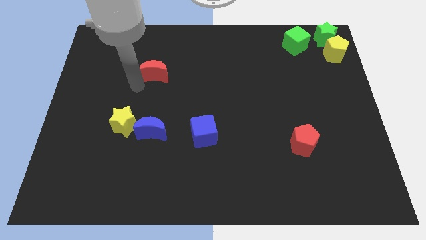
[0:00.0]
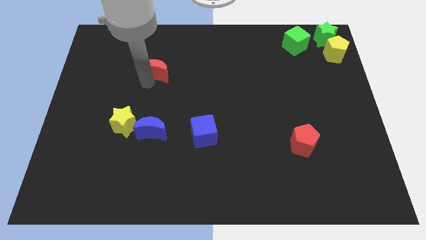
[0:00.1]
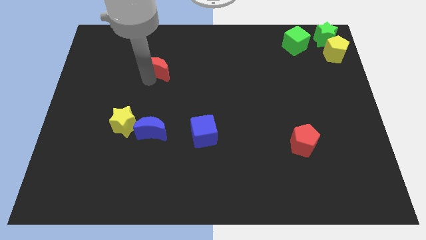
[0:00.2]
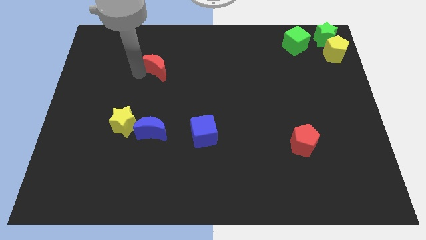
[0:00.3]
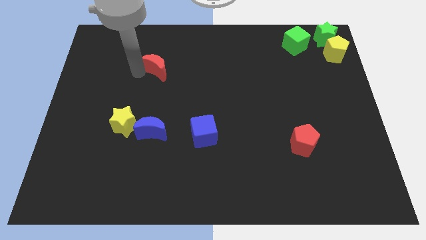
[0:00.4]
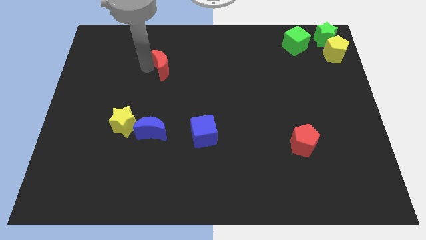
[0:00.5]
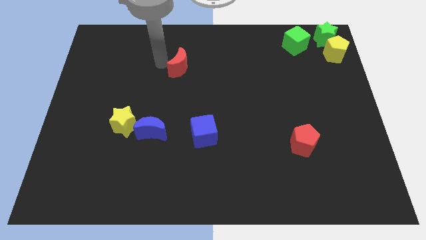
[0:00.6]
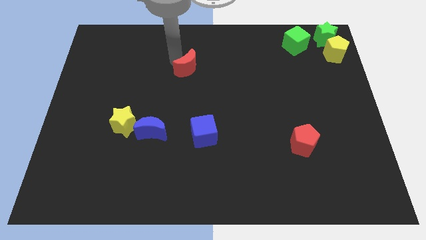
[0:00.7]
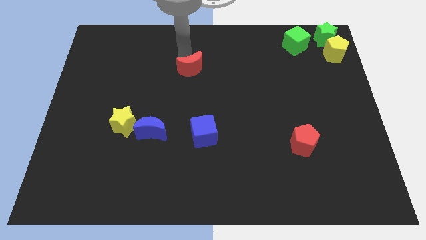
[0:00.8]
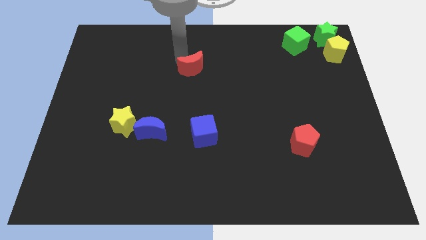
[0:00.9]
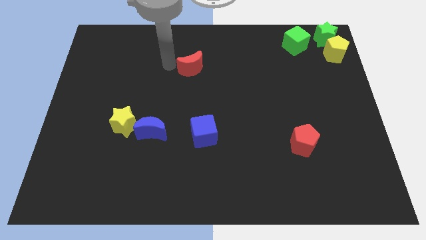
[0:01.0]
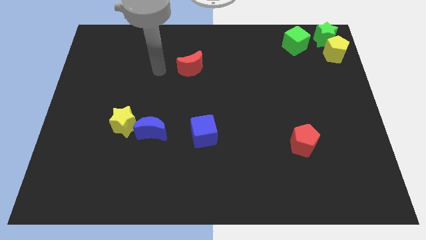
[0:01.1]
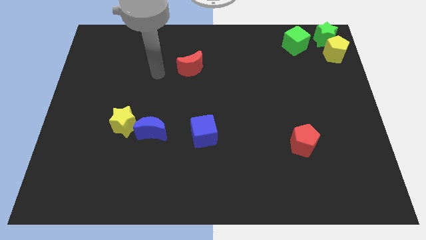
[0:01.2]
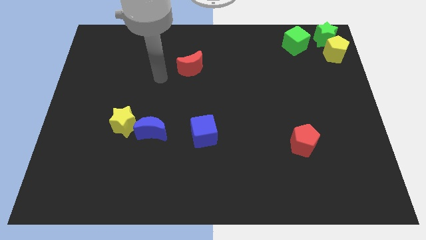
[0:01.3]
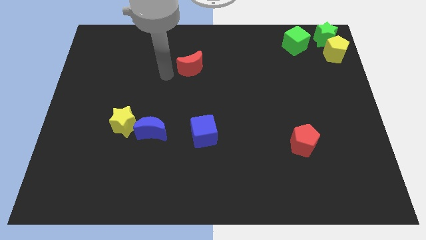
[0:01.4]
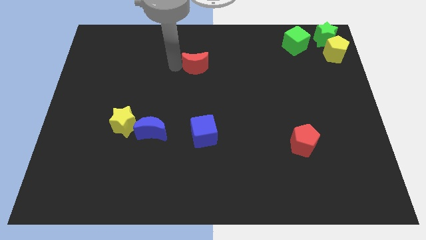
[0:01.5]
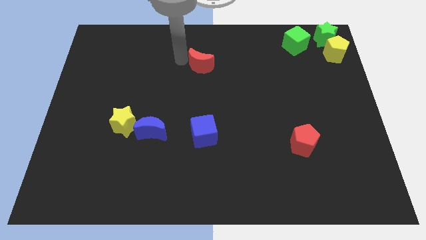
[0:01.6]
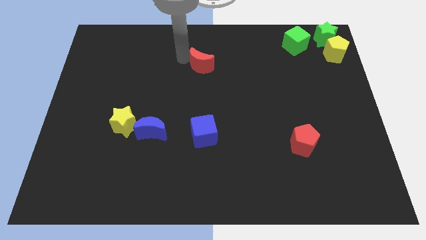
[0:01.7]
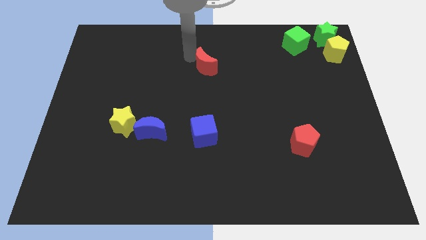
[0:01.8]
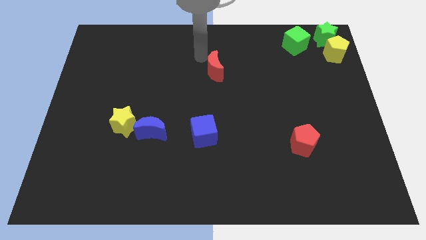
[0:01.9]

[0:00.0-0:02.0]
place the red moon towards the center of the board

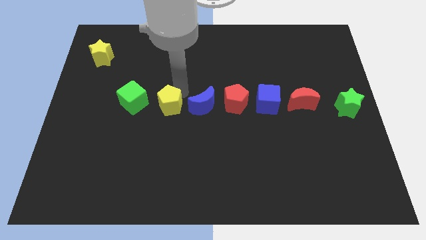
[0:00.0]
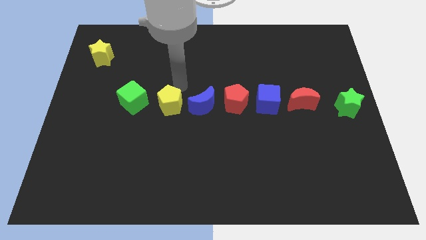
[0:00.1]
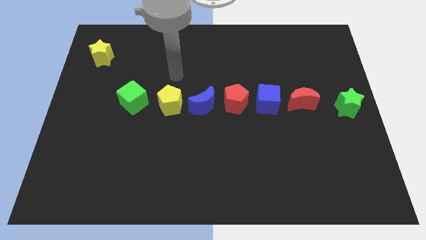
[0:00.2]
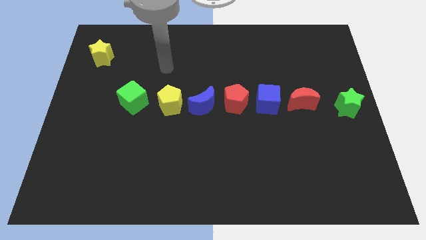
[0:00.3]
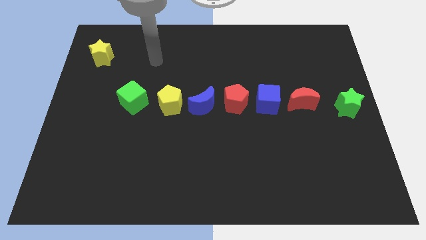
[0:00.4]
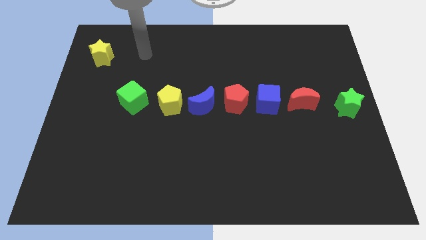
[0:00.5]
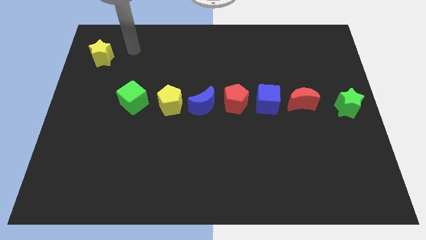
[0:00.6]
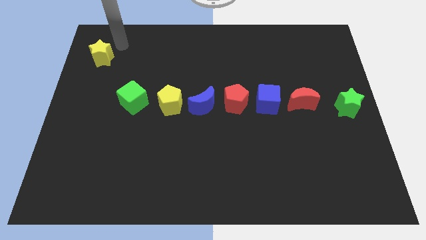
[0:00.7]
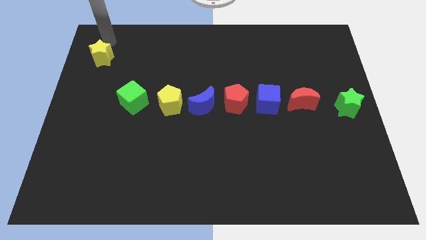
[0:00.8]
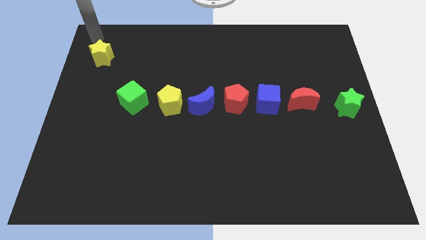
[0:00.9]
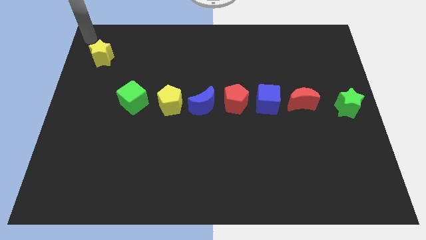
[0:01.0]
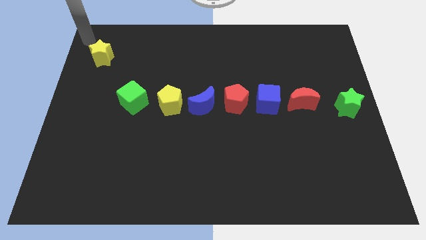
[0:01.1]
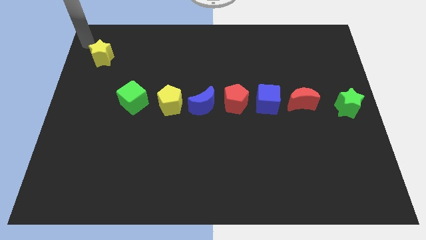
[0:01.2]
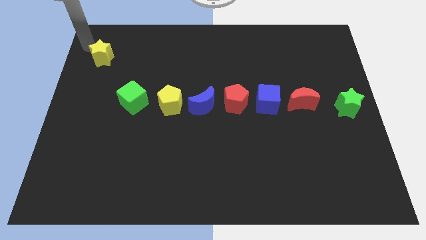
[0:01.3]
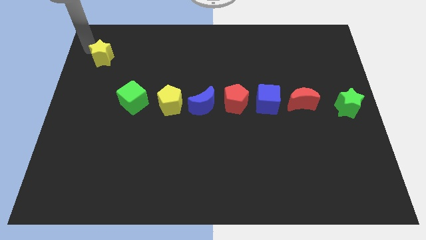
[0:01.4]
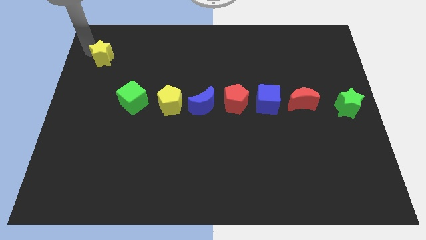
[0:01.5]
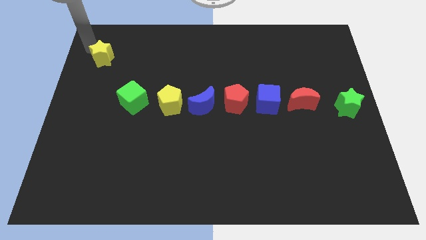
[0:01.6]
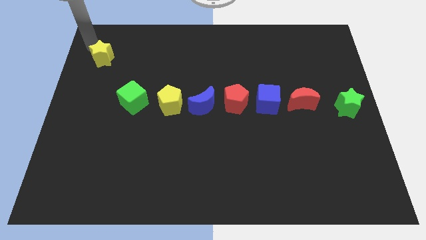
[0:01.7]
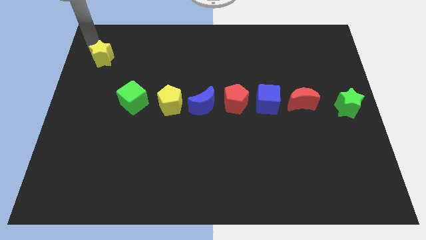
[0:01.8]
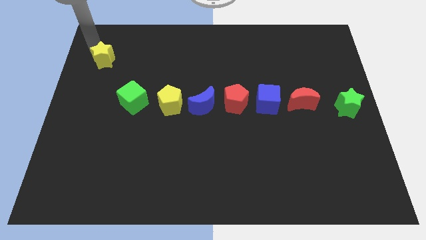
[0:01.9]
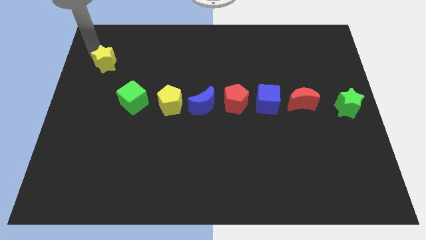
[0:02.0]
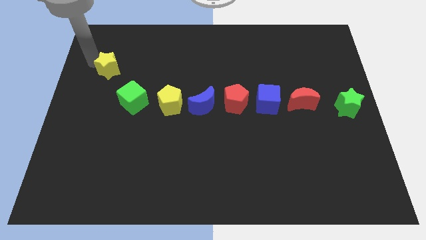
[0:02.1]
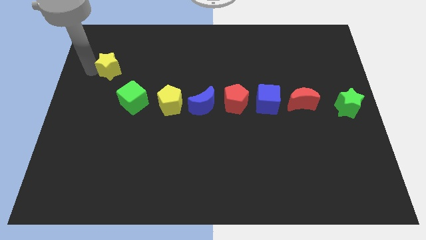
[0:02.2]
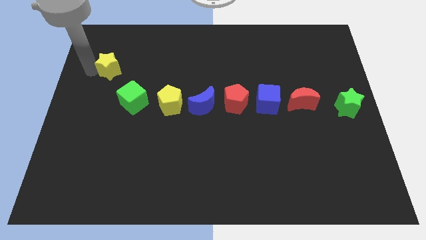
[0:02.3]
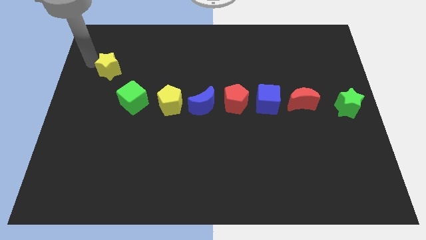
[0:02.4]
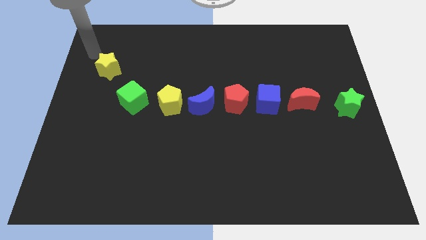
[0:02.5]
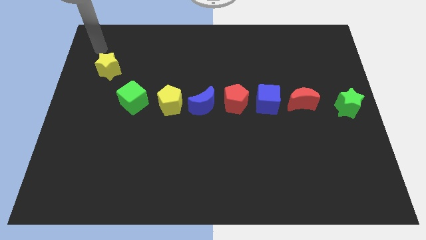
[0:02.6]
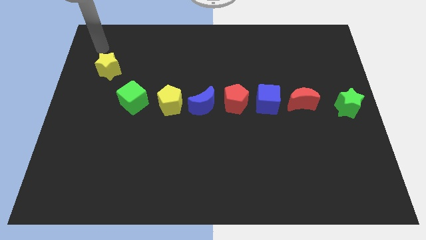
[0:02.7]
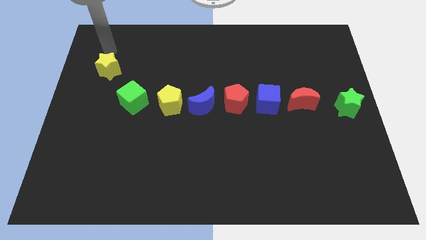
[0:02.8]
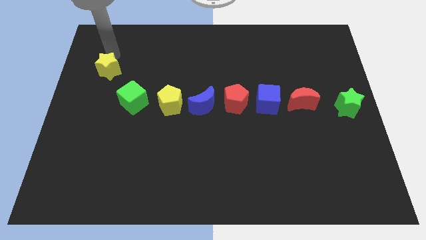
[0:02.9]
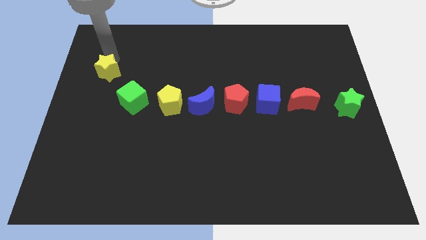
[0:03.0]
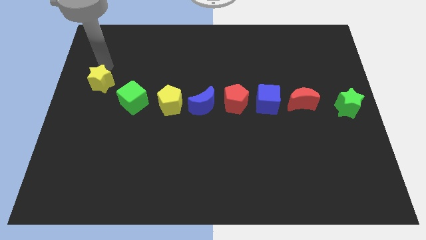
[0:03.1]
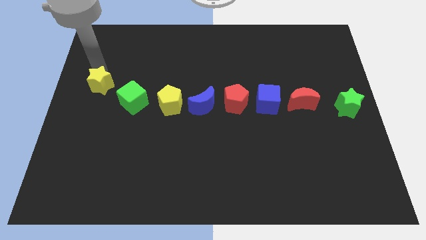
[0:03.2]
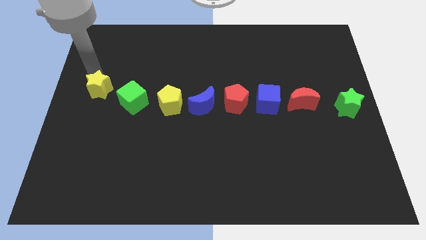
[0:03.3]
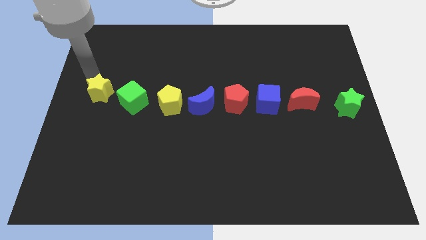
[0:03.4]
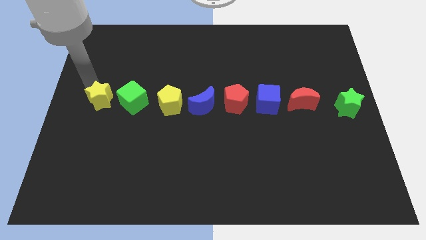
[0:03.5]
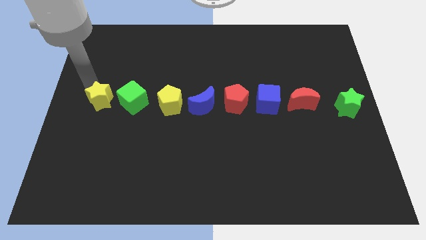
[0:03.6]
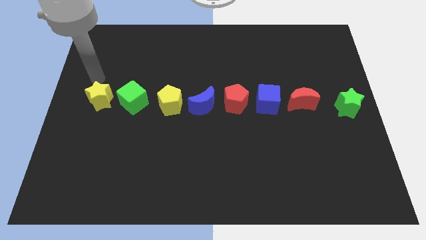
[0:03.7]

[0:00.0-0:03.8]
push the yellow star to the left of the green cube

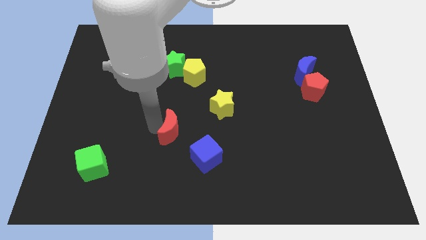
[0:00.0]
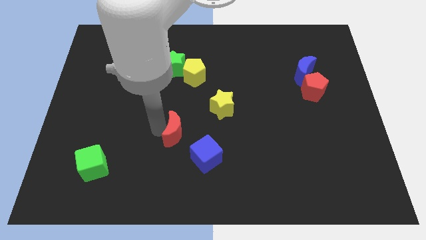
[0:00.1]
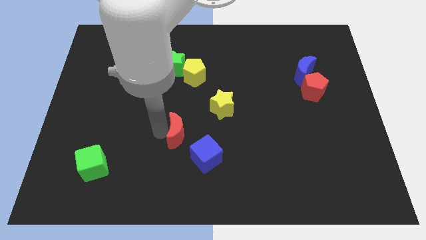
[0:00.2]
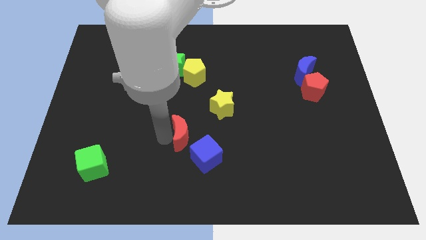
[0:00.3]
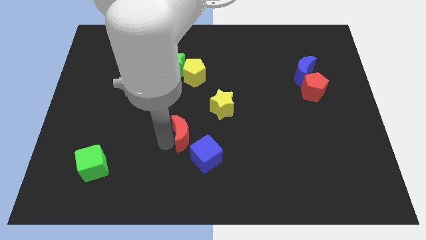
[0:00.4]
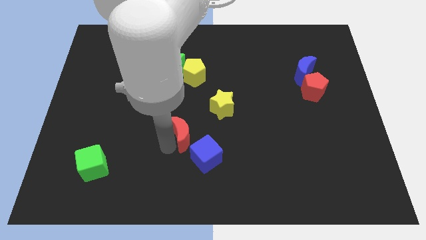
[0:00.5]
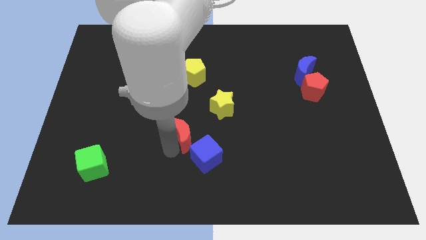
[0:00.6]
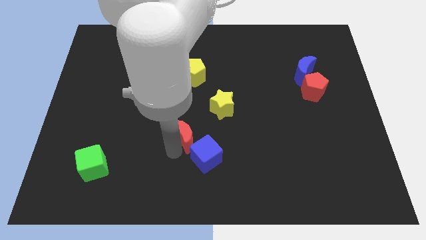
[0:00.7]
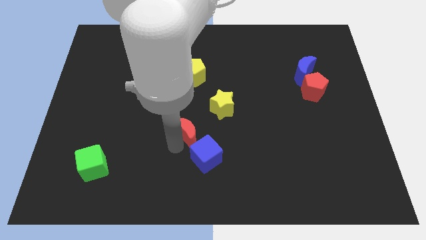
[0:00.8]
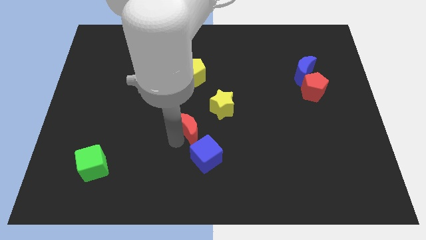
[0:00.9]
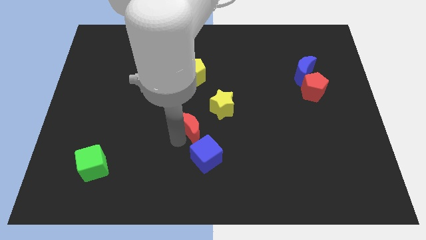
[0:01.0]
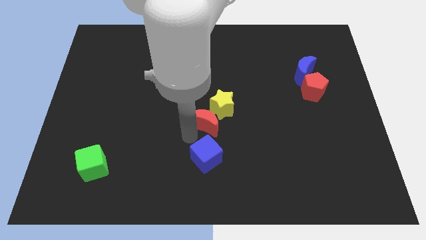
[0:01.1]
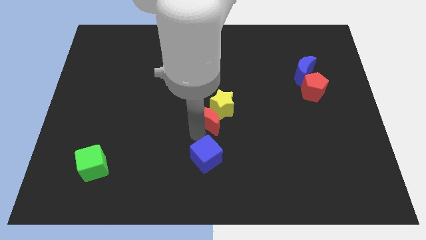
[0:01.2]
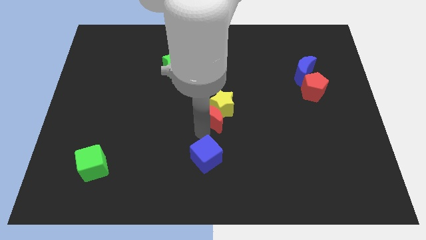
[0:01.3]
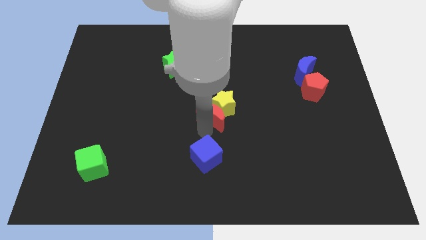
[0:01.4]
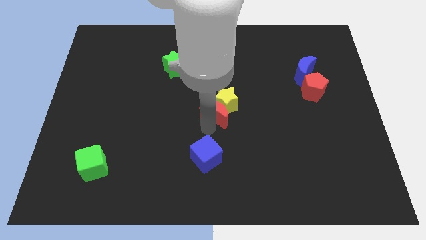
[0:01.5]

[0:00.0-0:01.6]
place the red moon below the yellow star

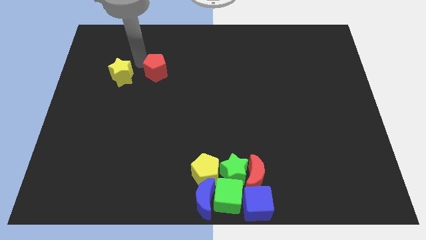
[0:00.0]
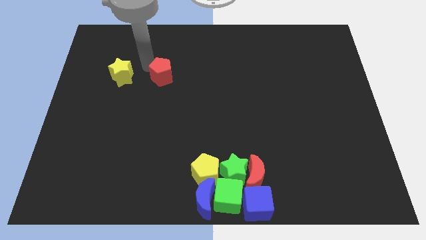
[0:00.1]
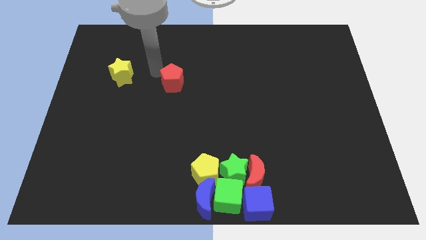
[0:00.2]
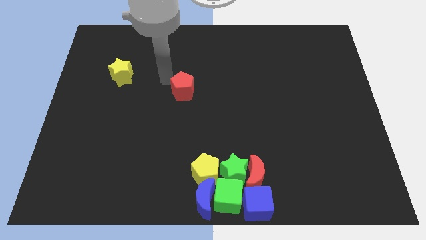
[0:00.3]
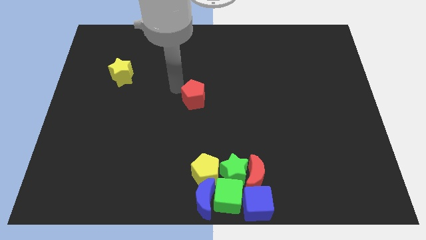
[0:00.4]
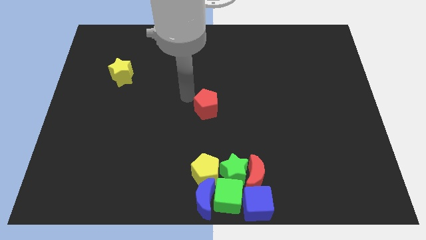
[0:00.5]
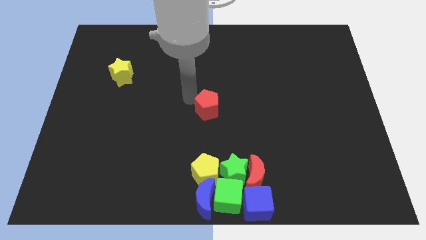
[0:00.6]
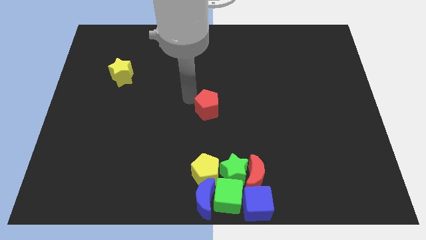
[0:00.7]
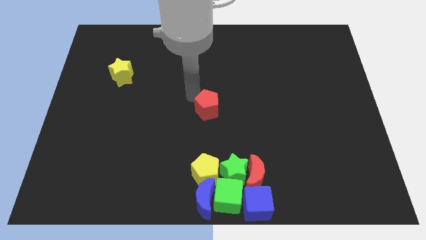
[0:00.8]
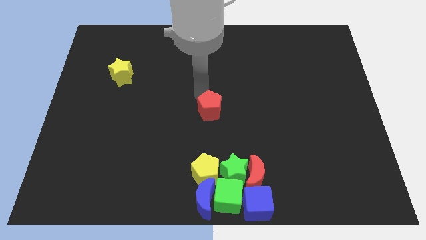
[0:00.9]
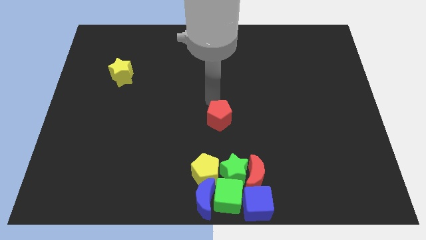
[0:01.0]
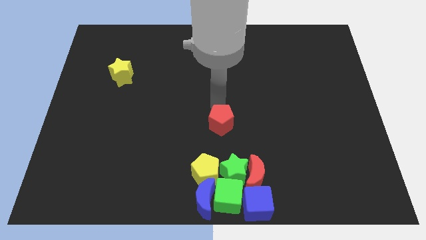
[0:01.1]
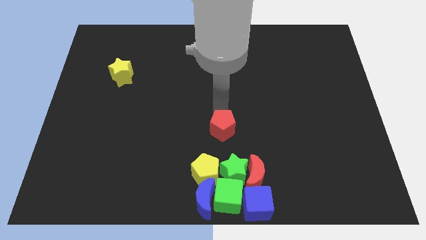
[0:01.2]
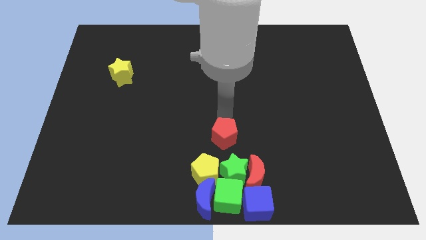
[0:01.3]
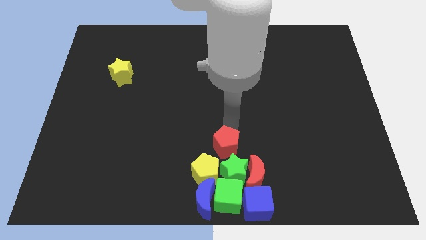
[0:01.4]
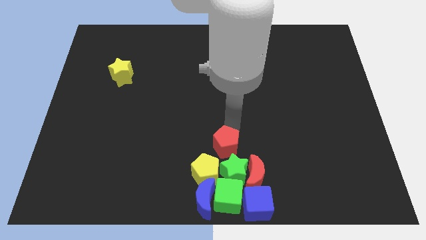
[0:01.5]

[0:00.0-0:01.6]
place the red pentagon vertically above the green star
